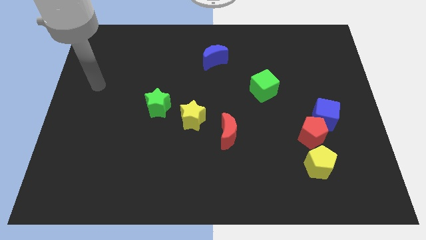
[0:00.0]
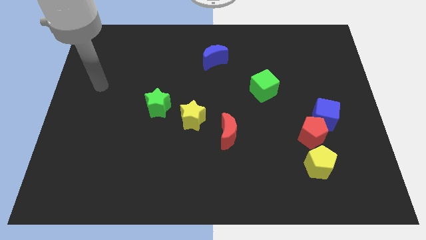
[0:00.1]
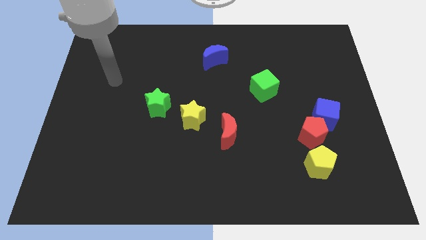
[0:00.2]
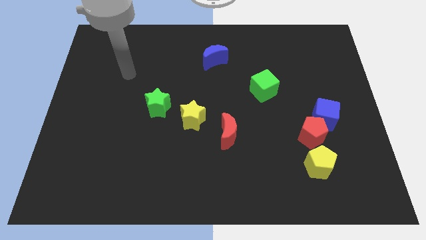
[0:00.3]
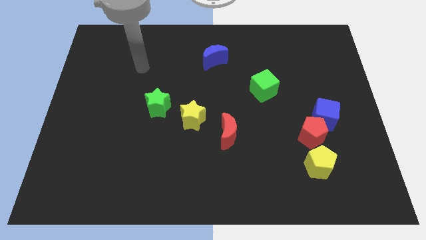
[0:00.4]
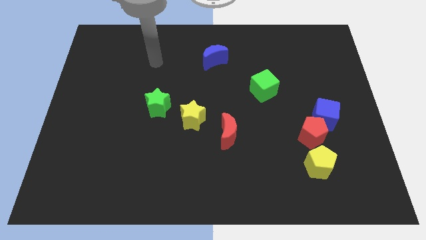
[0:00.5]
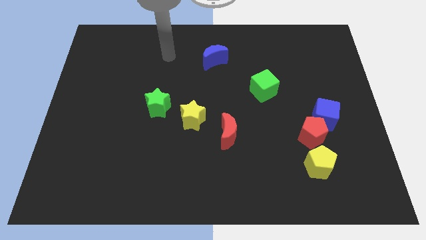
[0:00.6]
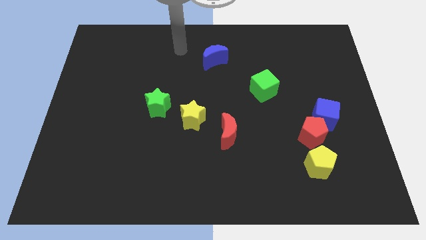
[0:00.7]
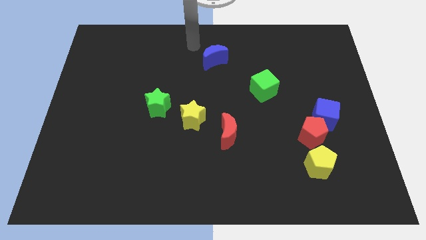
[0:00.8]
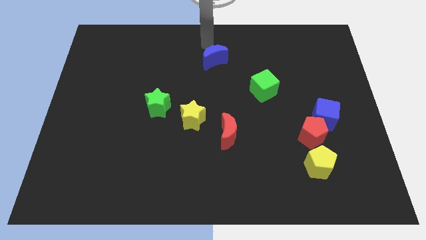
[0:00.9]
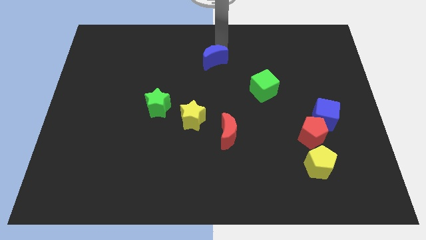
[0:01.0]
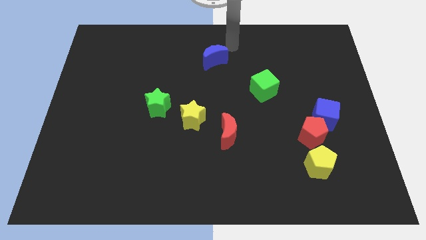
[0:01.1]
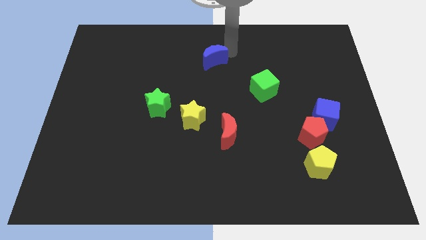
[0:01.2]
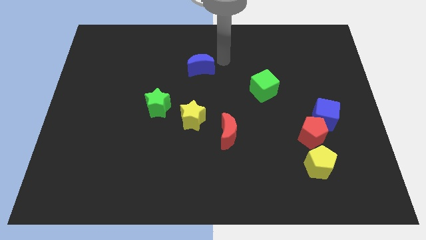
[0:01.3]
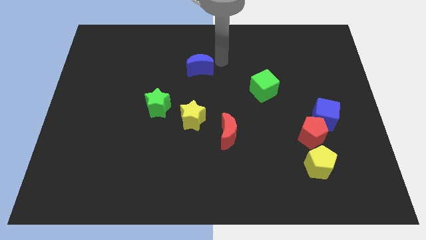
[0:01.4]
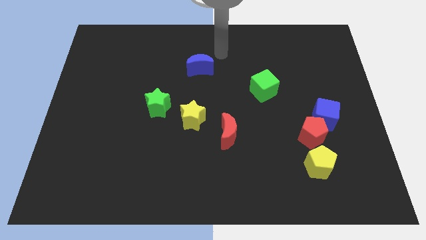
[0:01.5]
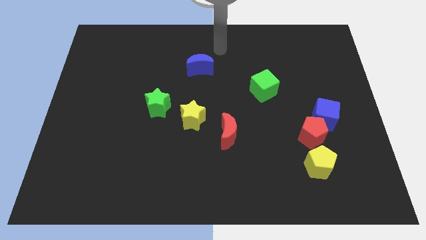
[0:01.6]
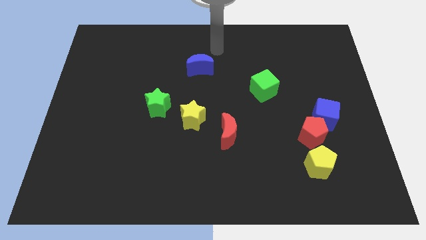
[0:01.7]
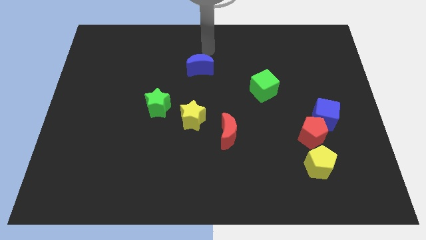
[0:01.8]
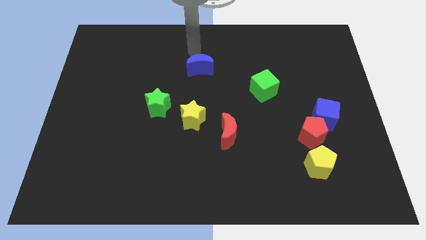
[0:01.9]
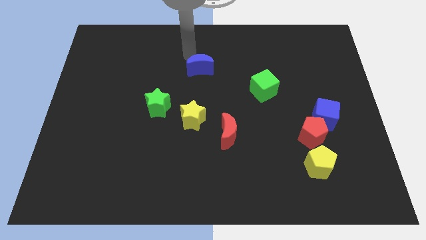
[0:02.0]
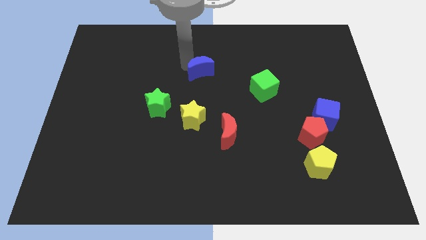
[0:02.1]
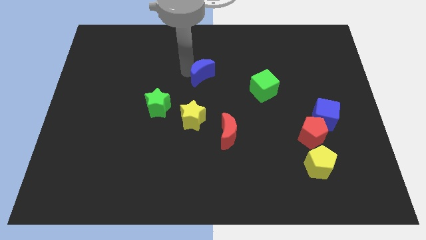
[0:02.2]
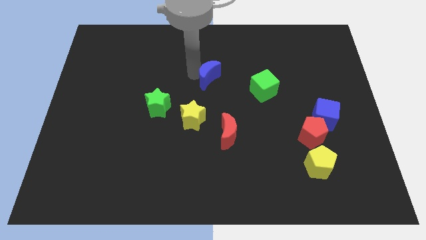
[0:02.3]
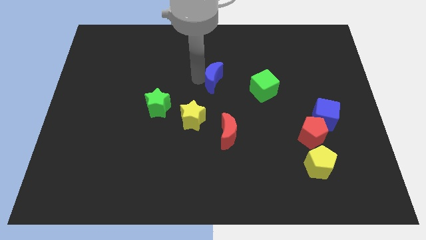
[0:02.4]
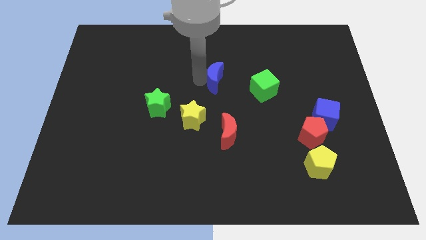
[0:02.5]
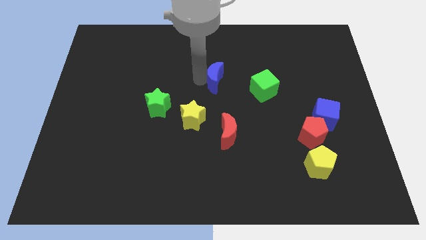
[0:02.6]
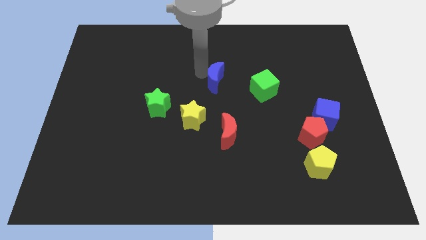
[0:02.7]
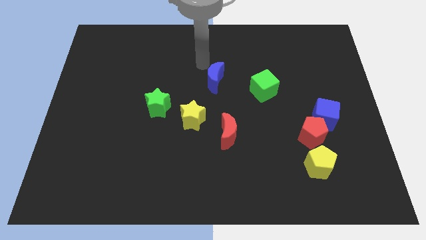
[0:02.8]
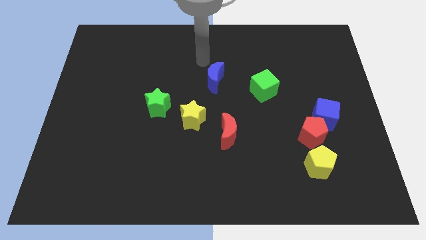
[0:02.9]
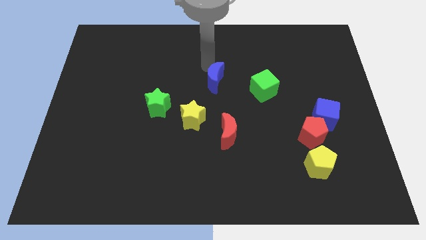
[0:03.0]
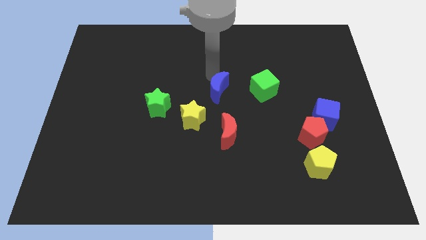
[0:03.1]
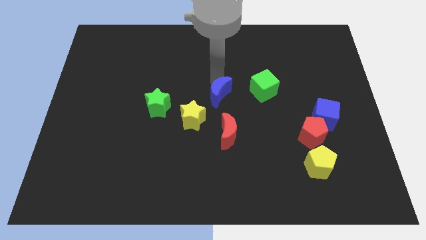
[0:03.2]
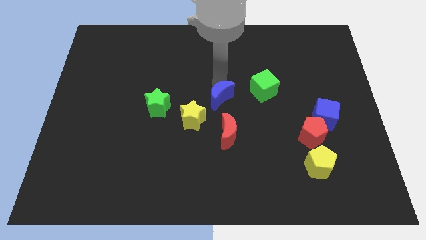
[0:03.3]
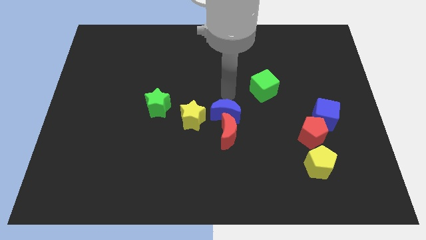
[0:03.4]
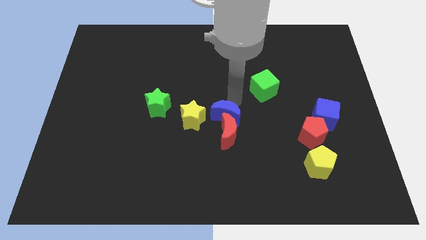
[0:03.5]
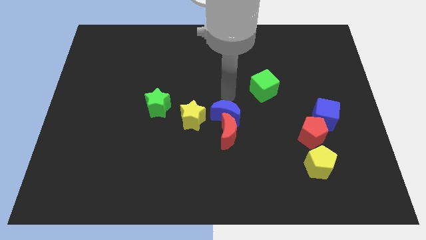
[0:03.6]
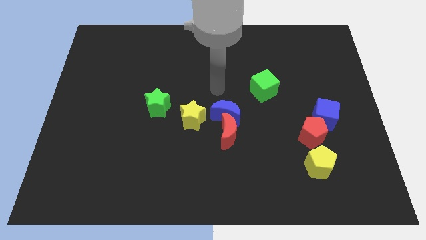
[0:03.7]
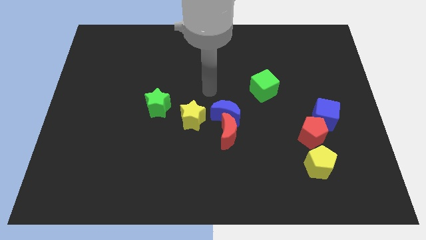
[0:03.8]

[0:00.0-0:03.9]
move the blue crescent towards the top of the red crescent

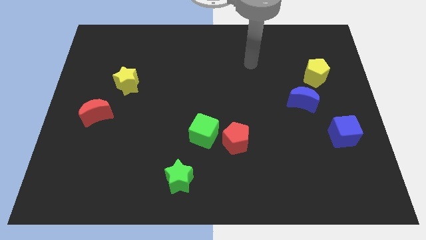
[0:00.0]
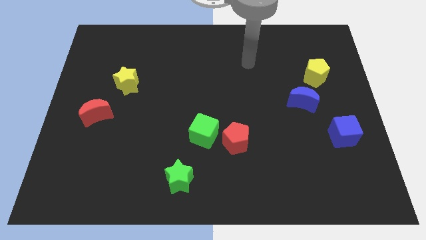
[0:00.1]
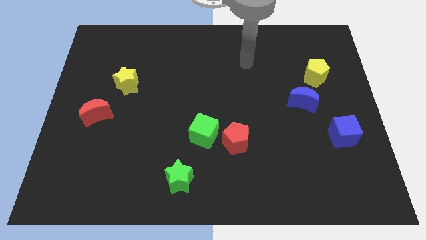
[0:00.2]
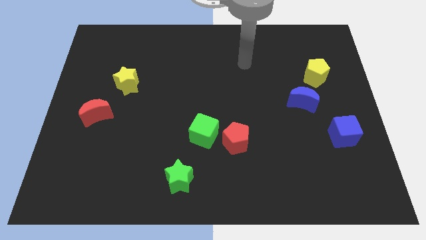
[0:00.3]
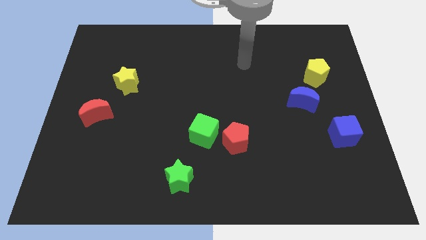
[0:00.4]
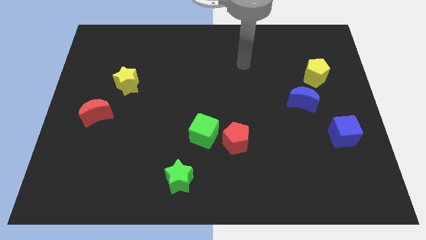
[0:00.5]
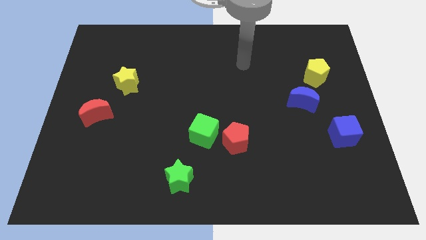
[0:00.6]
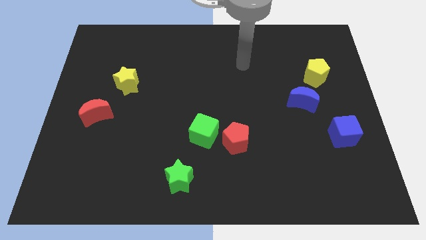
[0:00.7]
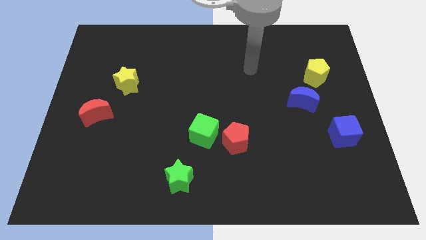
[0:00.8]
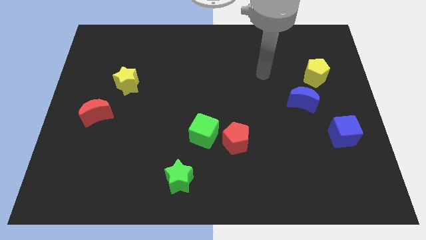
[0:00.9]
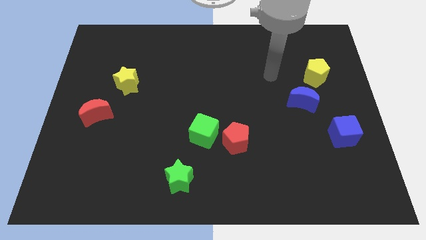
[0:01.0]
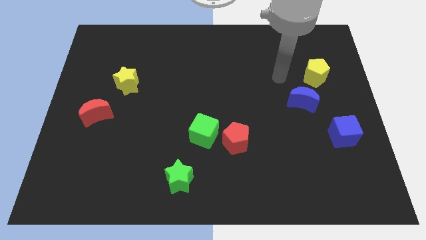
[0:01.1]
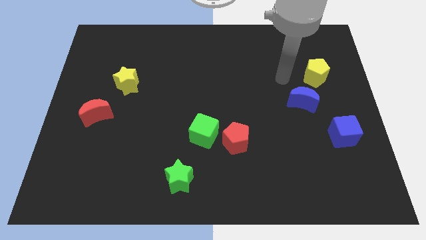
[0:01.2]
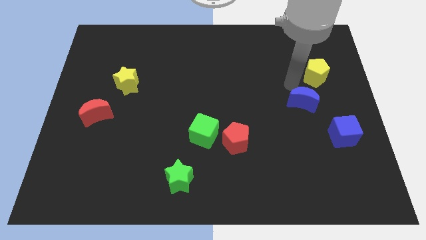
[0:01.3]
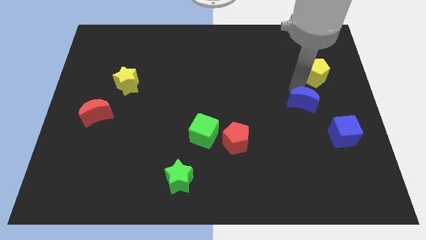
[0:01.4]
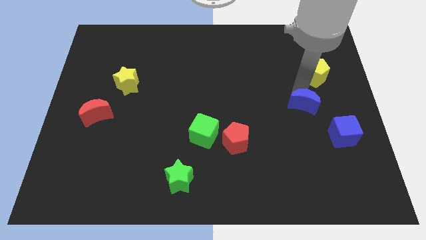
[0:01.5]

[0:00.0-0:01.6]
place your arm above the blue moon

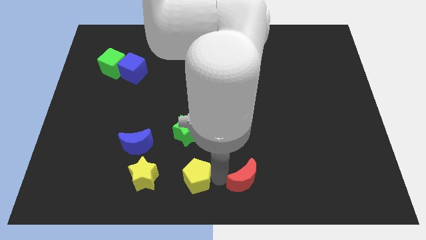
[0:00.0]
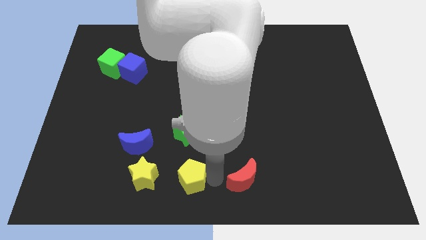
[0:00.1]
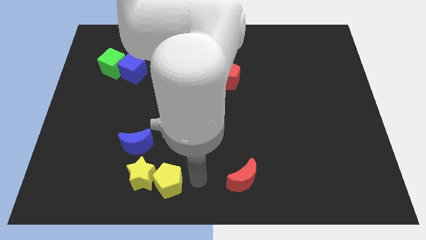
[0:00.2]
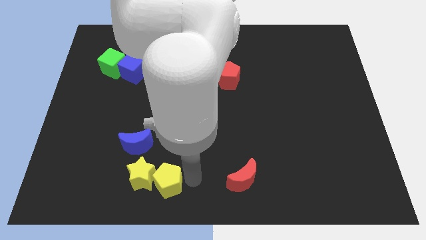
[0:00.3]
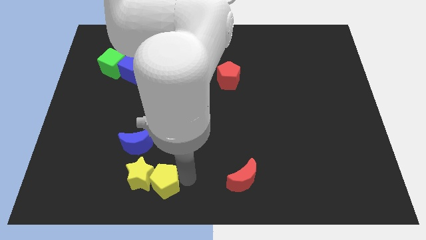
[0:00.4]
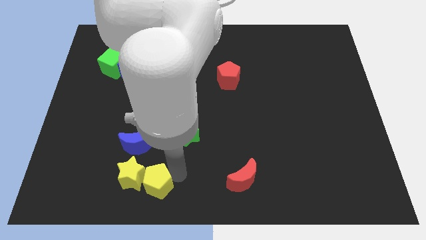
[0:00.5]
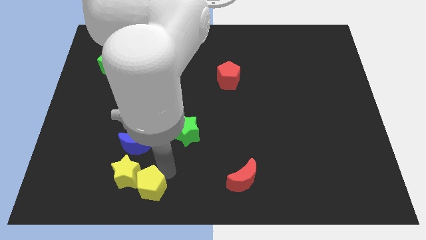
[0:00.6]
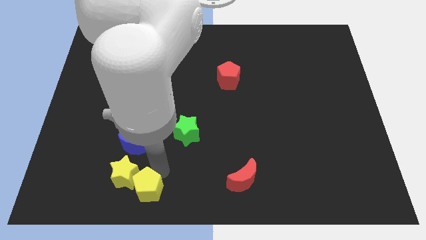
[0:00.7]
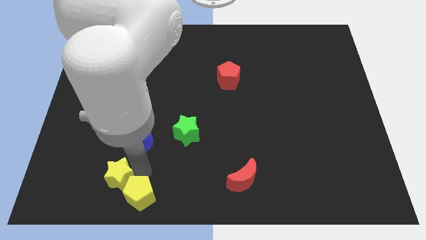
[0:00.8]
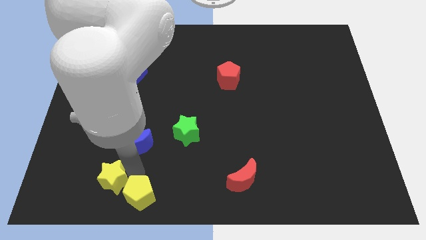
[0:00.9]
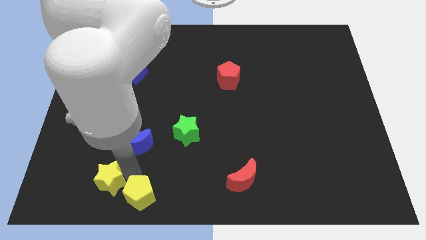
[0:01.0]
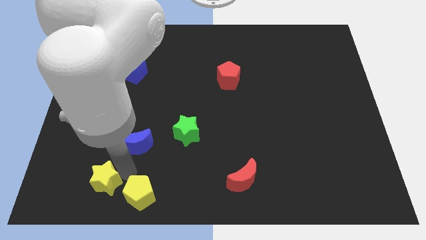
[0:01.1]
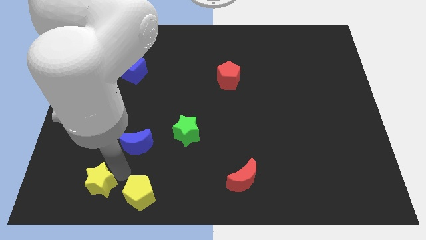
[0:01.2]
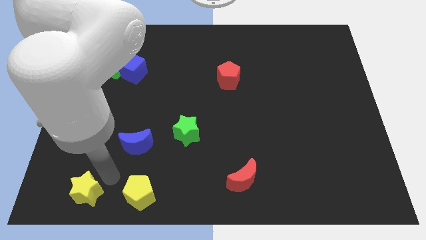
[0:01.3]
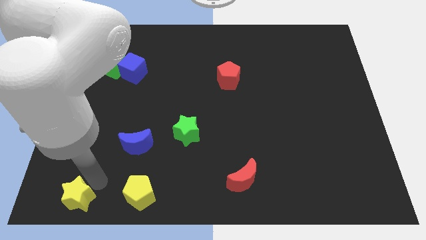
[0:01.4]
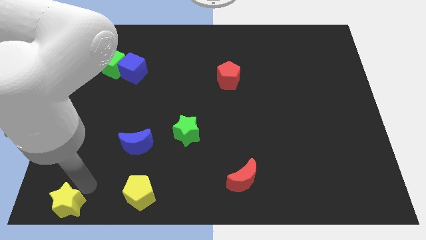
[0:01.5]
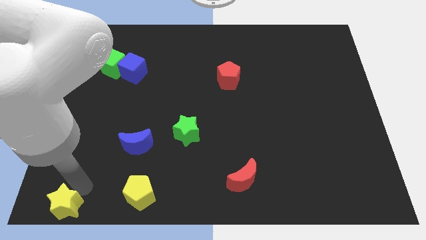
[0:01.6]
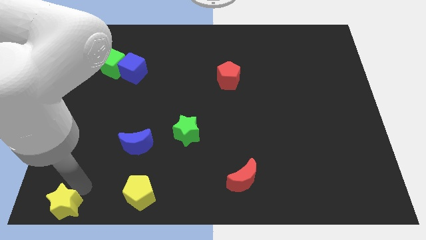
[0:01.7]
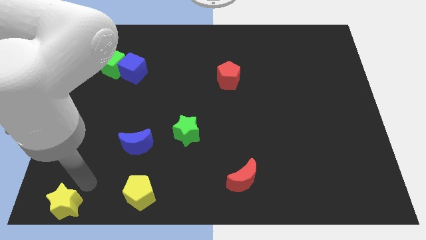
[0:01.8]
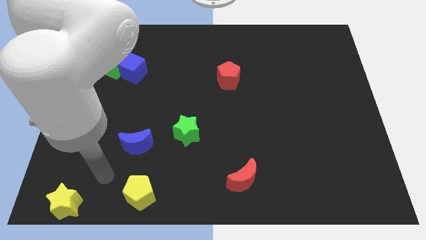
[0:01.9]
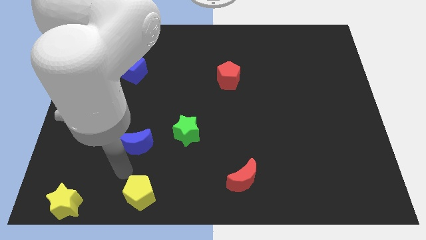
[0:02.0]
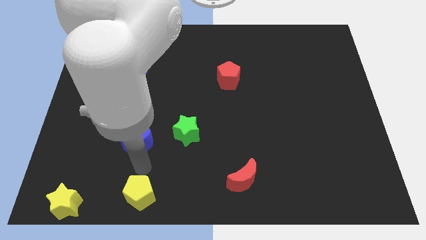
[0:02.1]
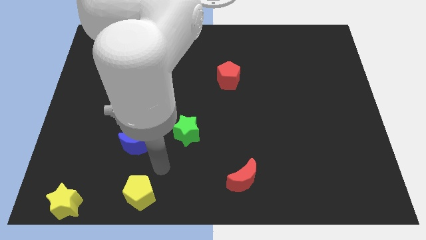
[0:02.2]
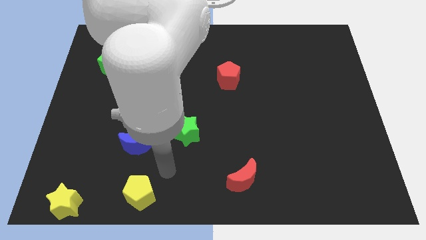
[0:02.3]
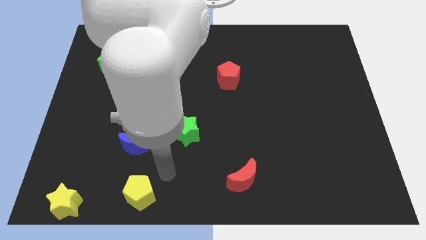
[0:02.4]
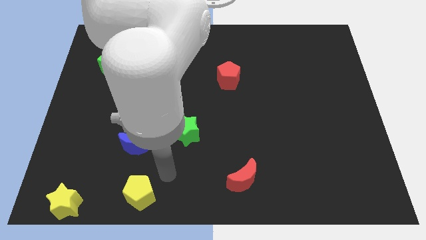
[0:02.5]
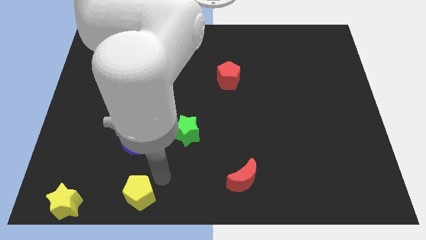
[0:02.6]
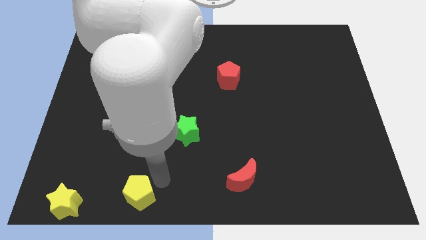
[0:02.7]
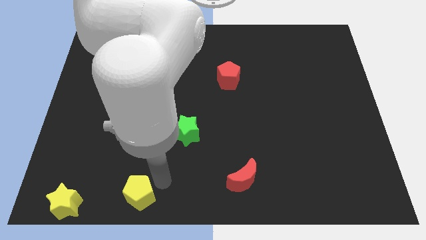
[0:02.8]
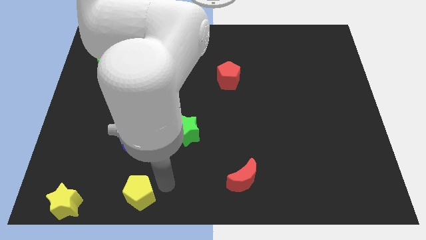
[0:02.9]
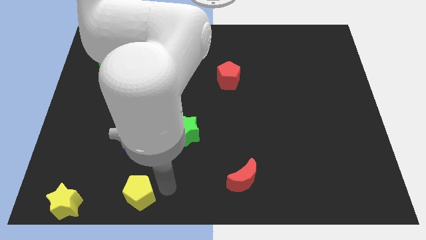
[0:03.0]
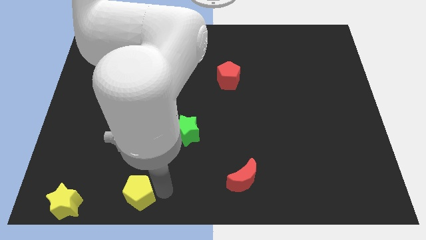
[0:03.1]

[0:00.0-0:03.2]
move the yellow star to the bottom left

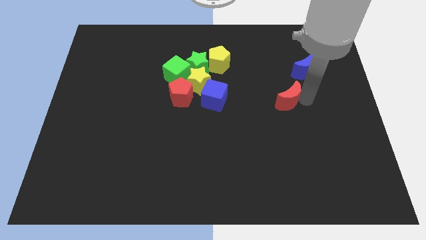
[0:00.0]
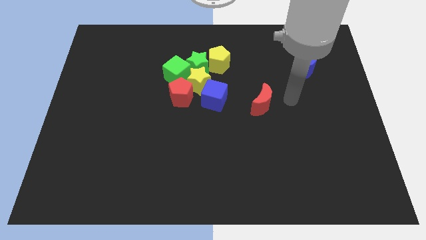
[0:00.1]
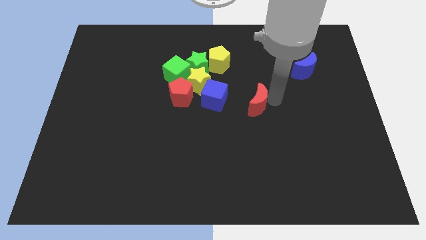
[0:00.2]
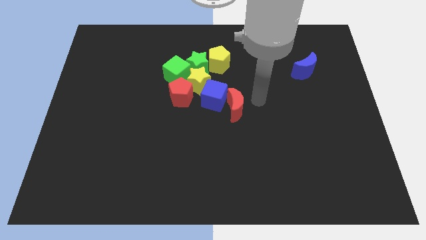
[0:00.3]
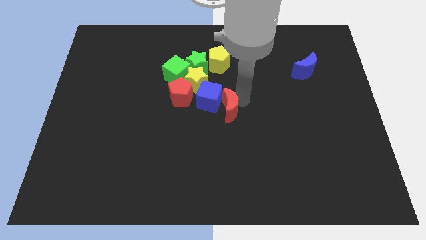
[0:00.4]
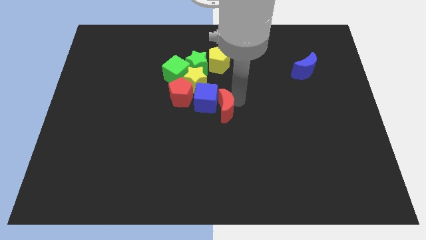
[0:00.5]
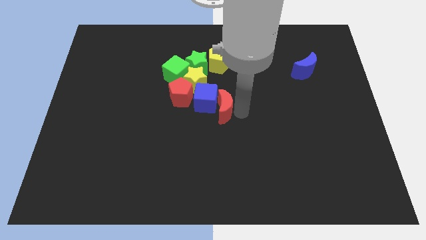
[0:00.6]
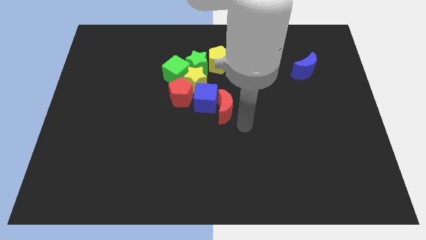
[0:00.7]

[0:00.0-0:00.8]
move the red moon into the blue cube
